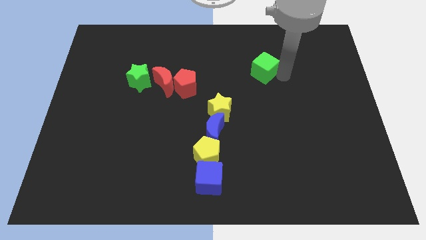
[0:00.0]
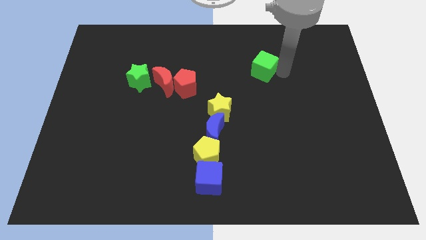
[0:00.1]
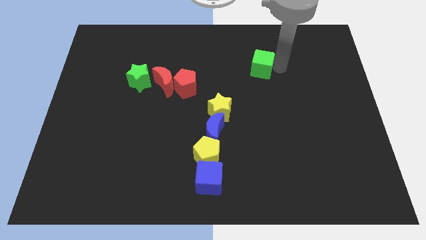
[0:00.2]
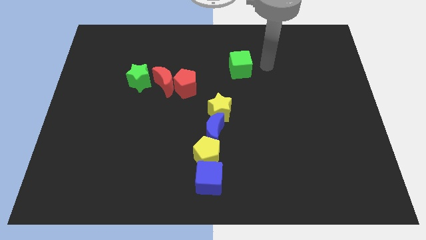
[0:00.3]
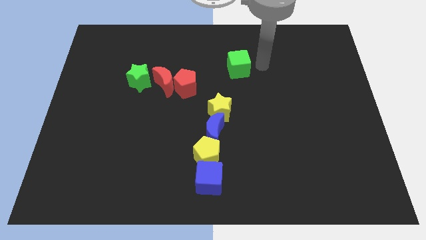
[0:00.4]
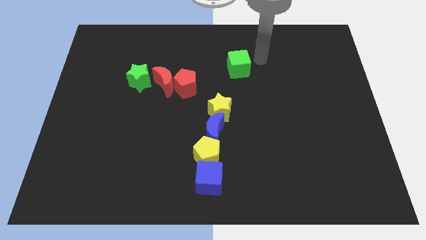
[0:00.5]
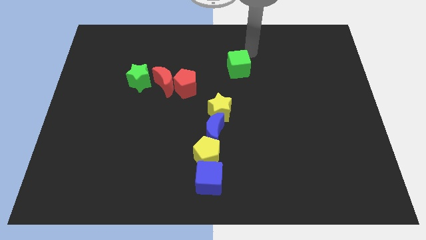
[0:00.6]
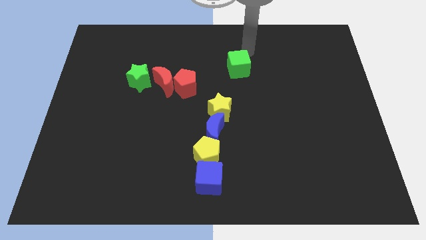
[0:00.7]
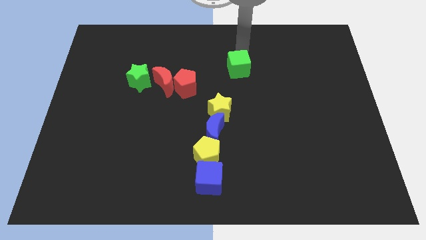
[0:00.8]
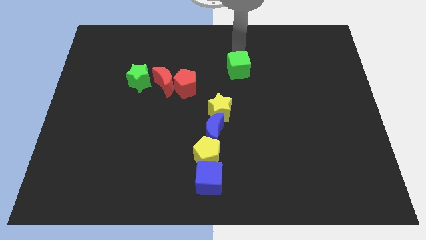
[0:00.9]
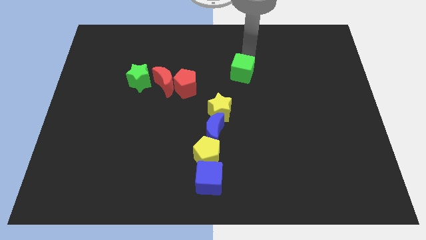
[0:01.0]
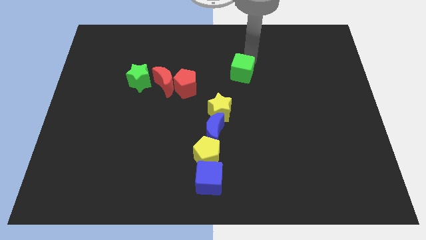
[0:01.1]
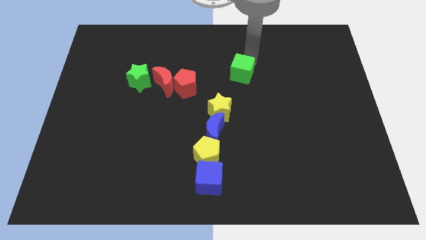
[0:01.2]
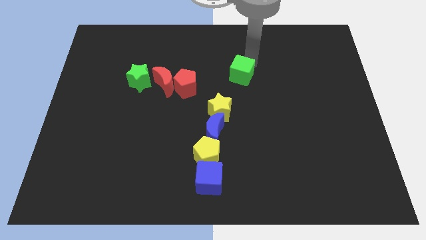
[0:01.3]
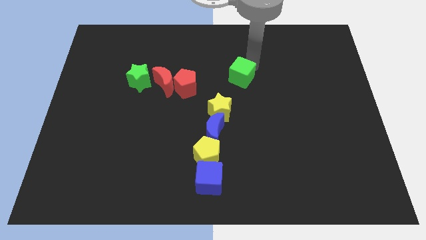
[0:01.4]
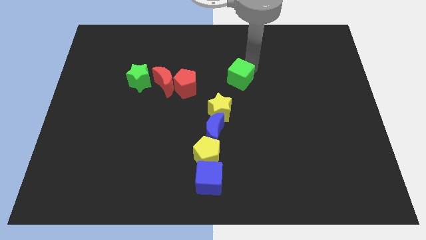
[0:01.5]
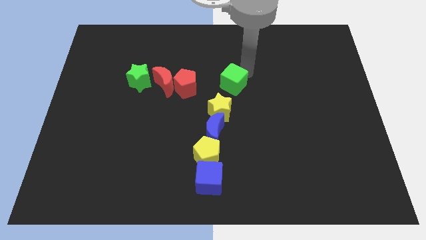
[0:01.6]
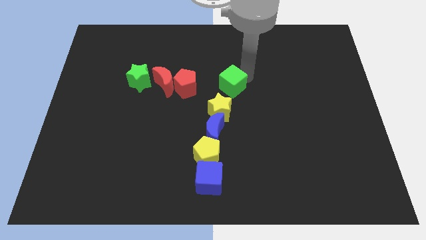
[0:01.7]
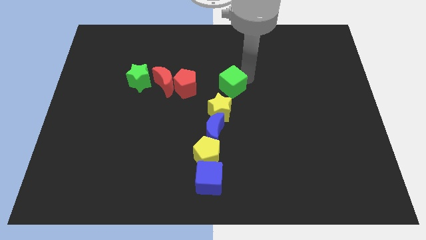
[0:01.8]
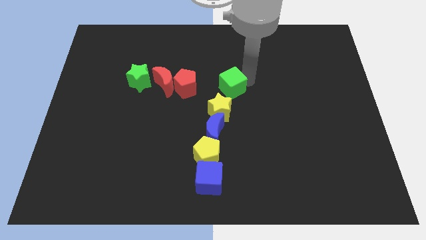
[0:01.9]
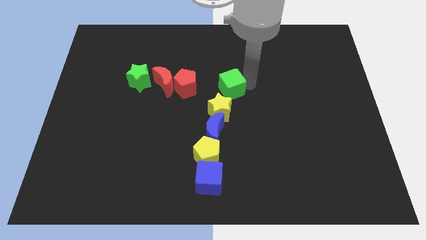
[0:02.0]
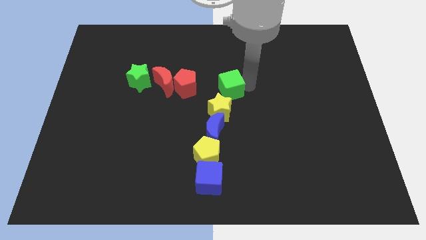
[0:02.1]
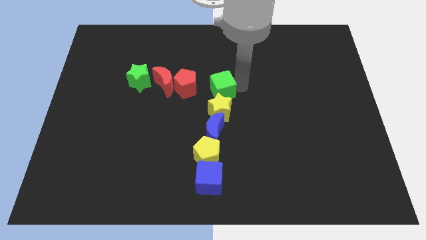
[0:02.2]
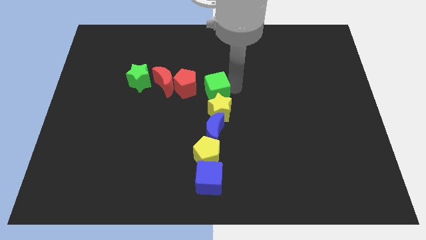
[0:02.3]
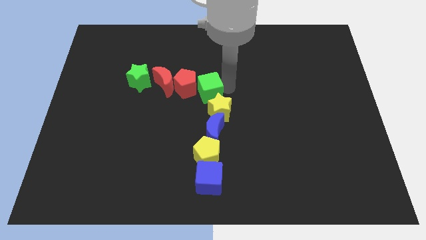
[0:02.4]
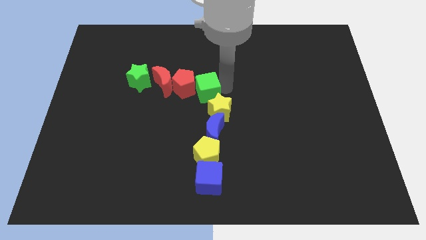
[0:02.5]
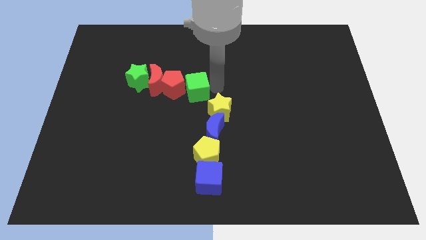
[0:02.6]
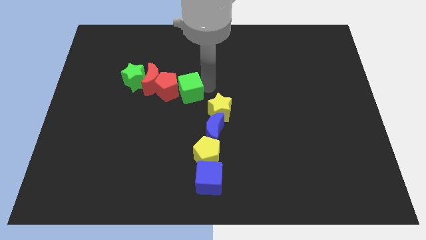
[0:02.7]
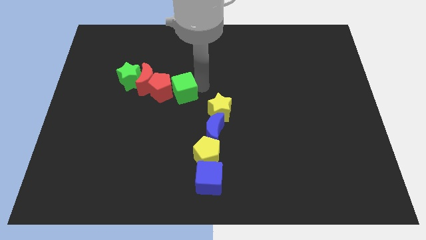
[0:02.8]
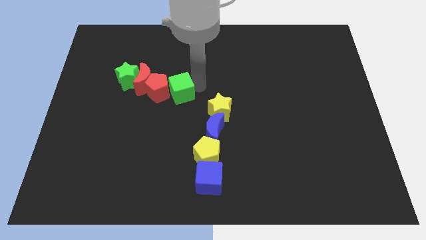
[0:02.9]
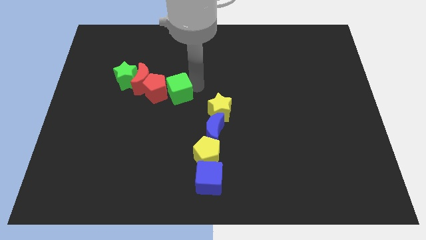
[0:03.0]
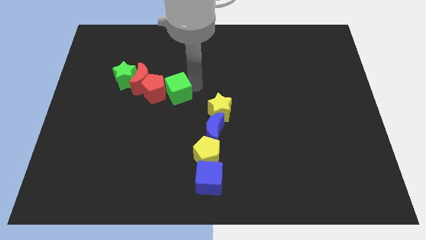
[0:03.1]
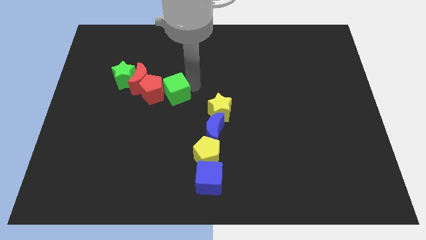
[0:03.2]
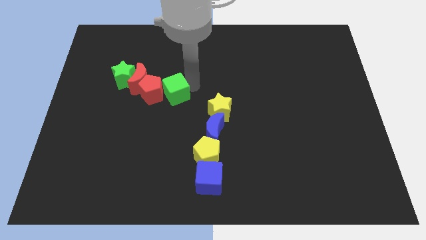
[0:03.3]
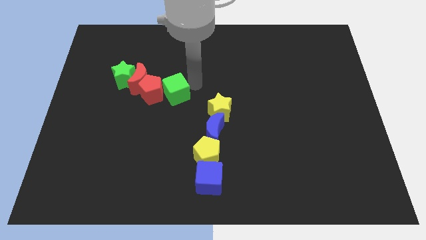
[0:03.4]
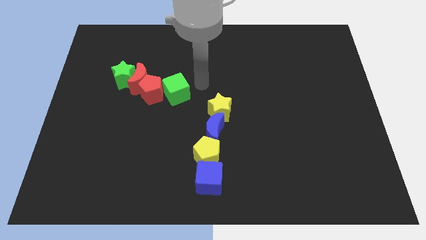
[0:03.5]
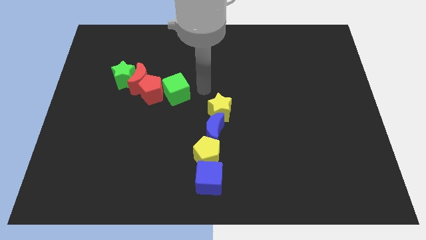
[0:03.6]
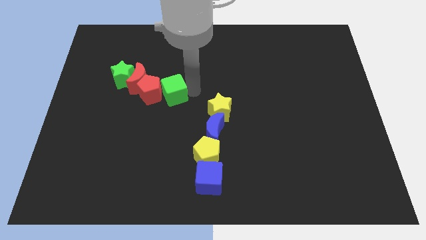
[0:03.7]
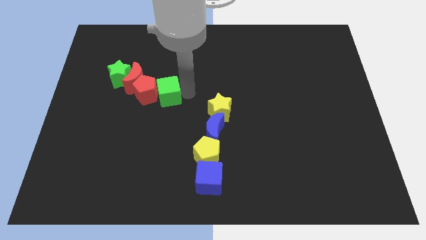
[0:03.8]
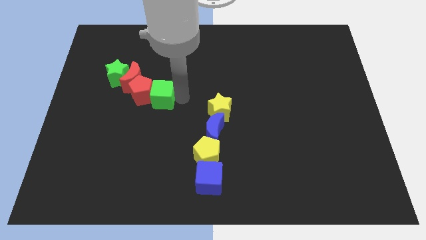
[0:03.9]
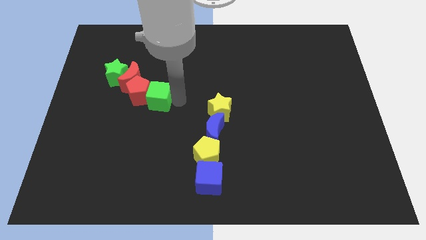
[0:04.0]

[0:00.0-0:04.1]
slide green cube into red pentagon

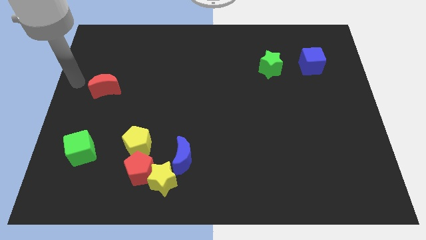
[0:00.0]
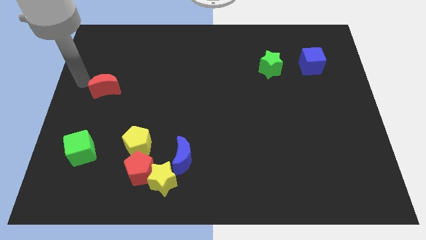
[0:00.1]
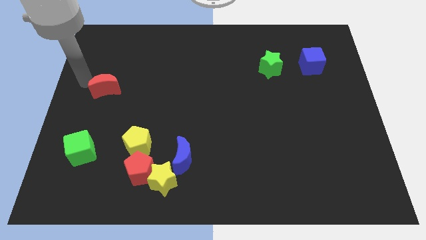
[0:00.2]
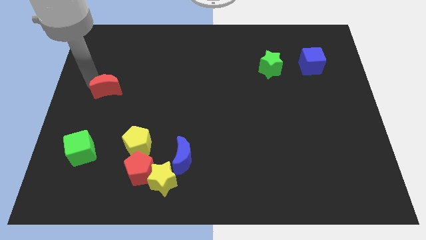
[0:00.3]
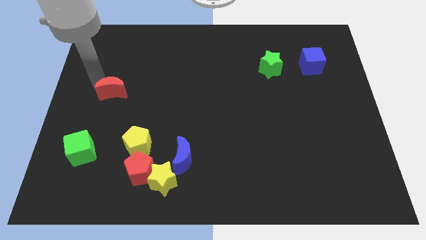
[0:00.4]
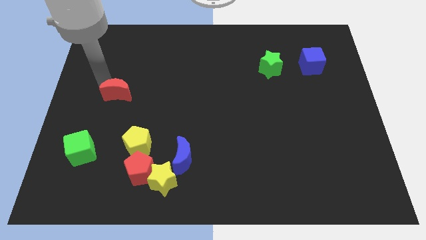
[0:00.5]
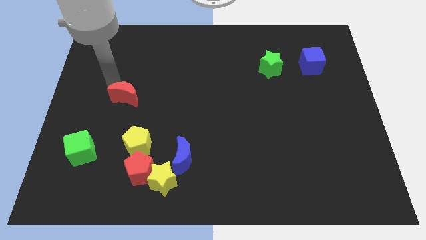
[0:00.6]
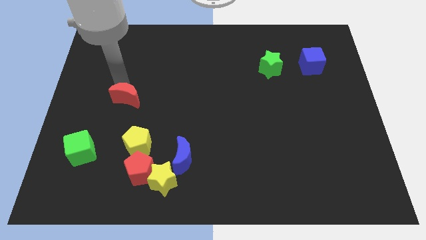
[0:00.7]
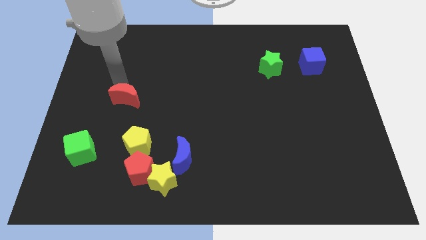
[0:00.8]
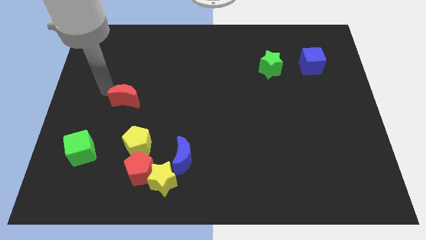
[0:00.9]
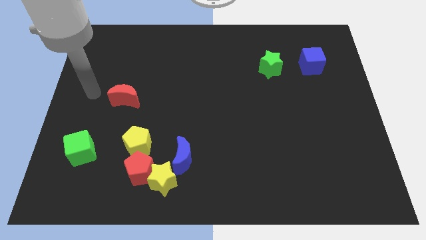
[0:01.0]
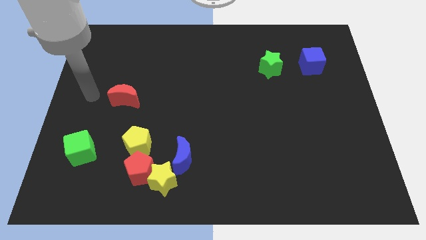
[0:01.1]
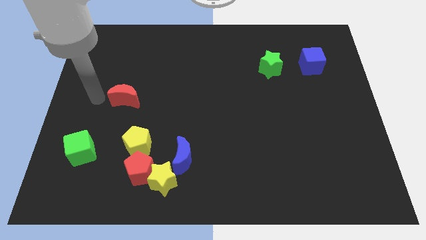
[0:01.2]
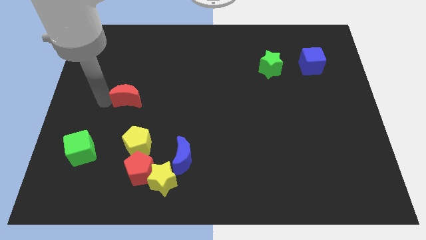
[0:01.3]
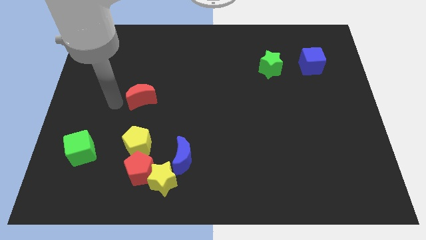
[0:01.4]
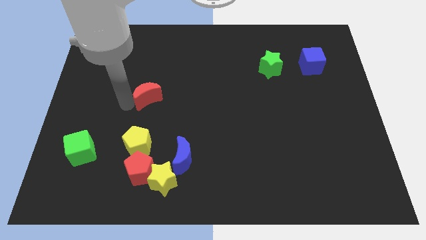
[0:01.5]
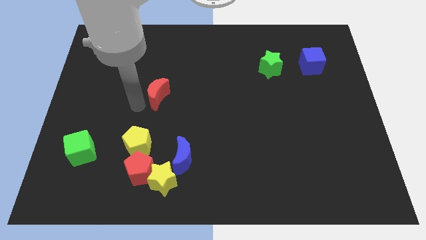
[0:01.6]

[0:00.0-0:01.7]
slightly move the red crescent to the right

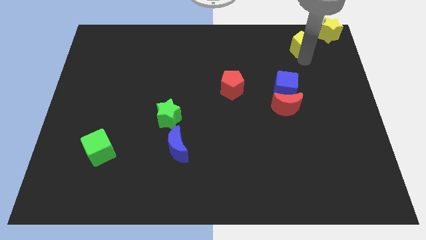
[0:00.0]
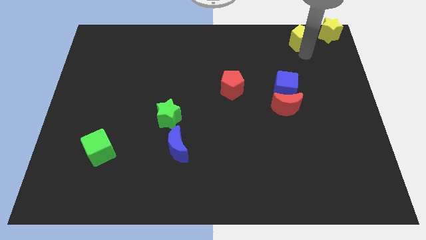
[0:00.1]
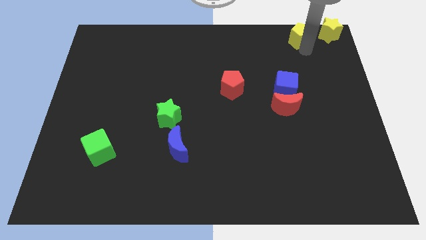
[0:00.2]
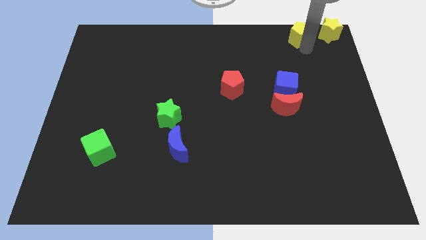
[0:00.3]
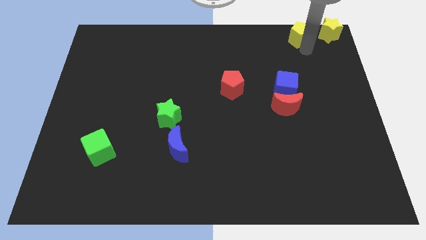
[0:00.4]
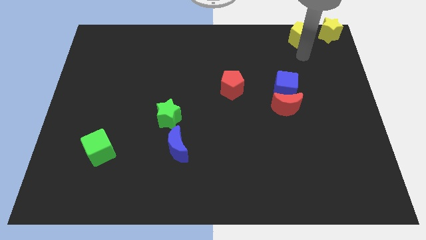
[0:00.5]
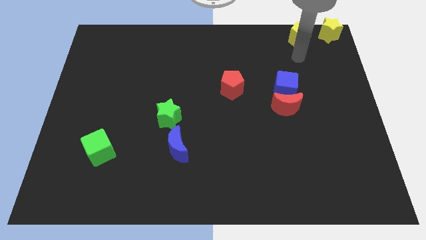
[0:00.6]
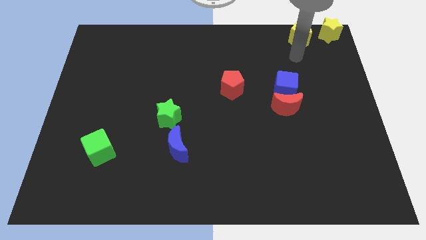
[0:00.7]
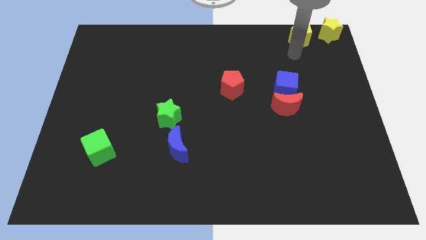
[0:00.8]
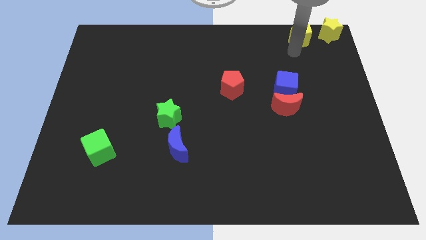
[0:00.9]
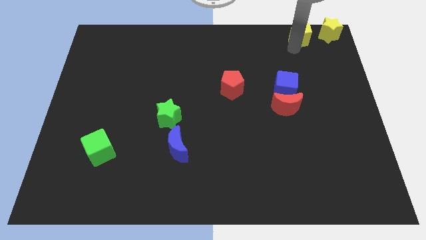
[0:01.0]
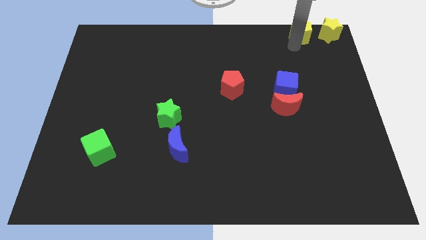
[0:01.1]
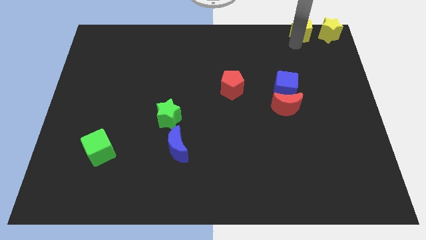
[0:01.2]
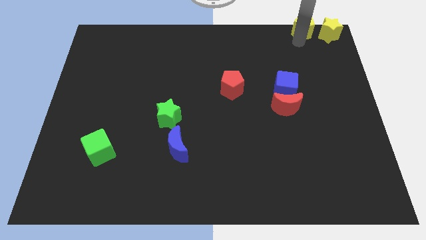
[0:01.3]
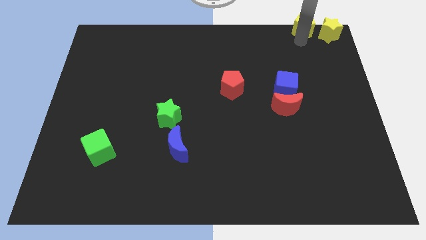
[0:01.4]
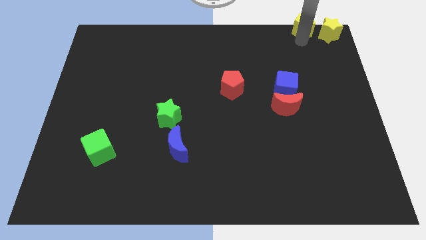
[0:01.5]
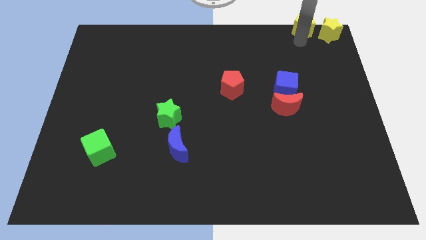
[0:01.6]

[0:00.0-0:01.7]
place the yellow pentagon beside the yellow star

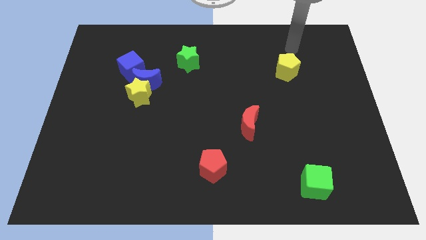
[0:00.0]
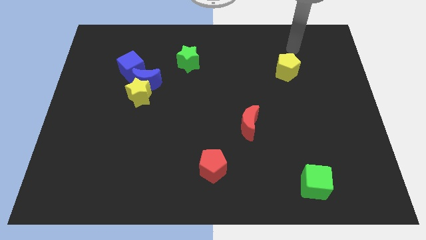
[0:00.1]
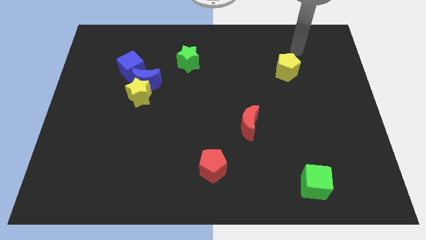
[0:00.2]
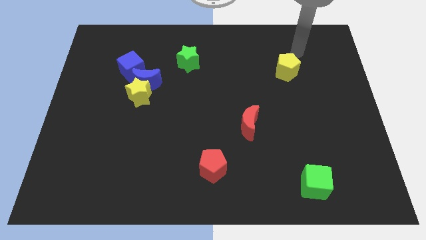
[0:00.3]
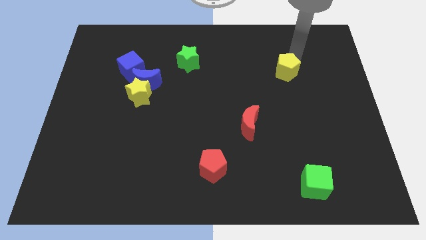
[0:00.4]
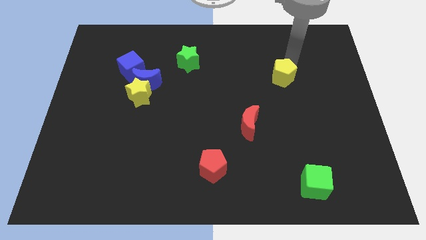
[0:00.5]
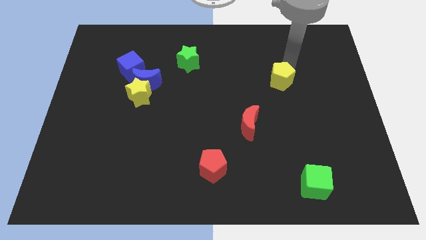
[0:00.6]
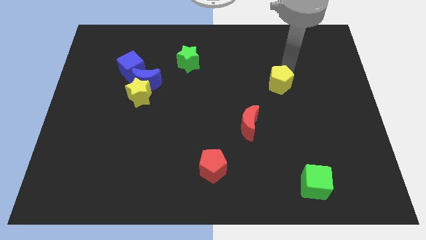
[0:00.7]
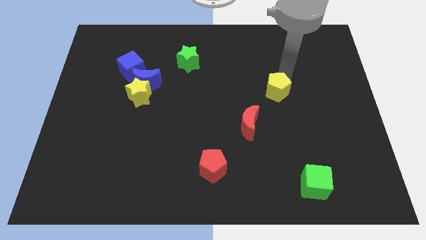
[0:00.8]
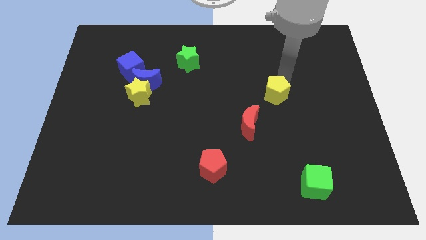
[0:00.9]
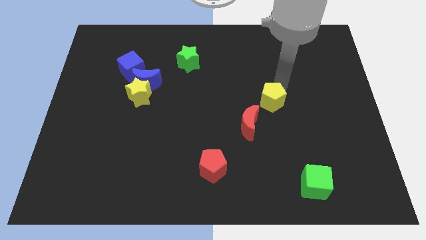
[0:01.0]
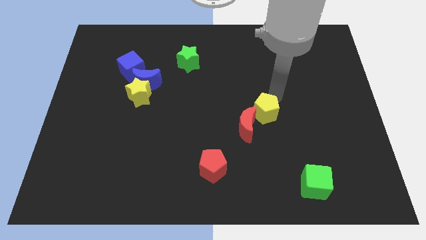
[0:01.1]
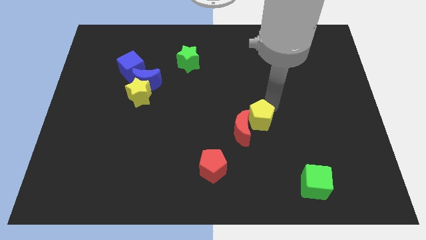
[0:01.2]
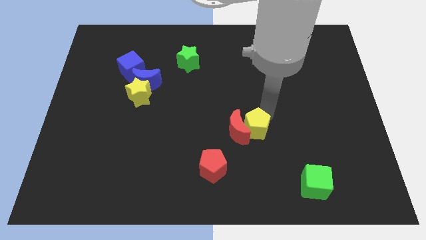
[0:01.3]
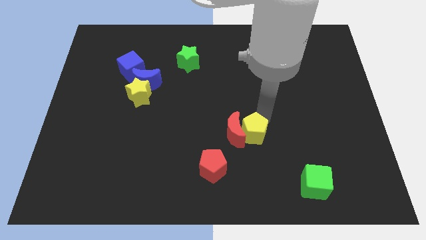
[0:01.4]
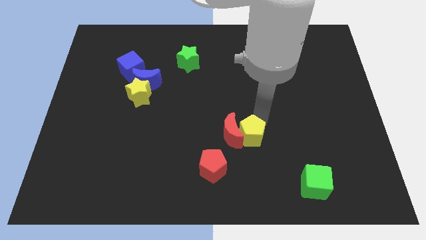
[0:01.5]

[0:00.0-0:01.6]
push the yellow pentagon into the red moon
